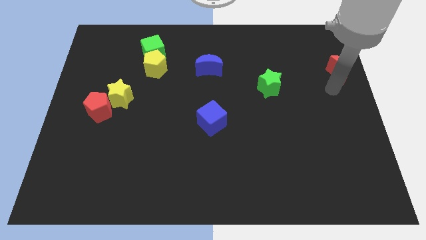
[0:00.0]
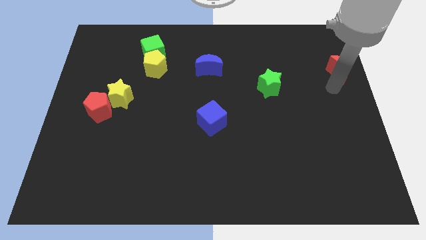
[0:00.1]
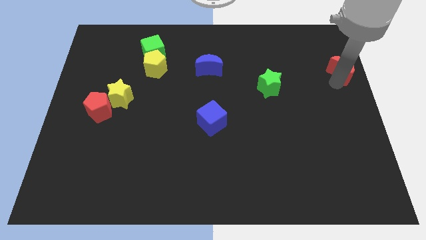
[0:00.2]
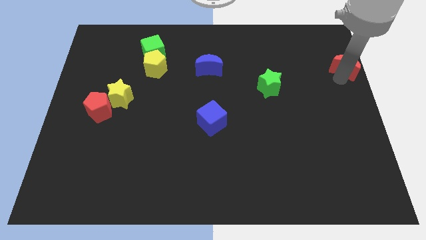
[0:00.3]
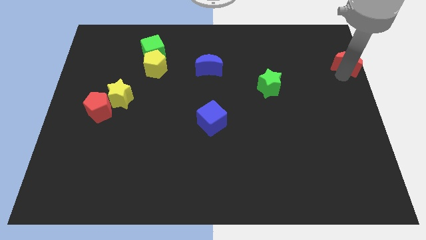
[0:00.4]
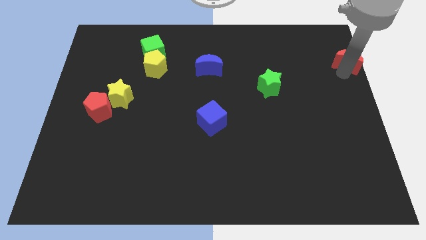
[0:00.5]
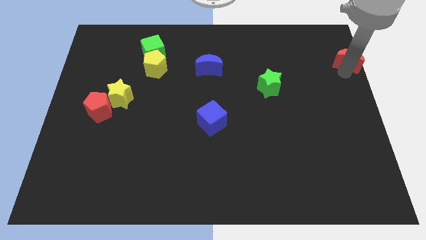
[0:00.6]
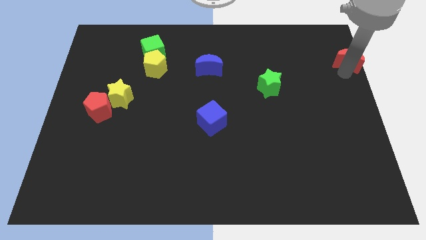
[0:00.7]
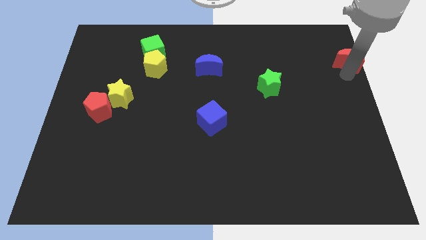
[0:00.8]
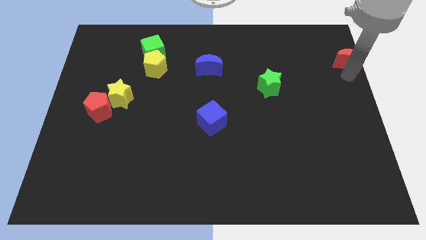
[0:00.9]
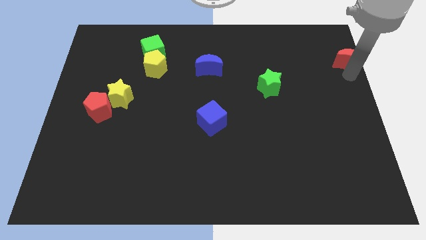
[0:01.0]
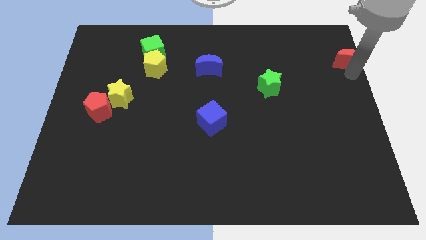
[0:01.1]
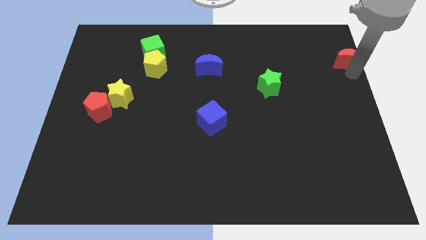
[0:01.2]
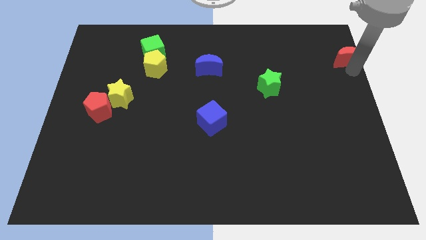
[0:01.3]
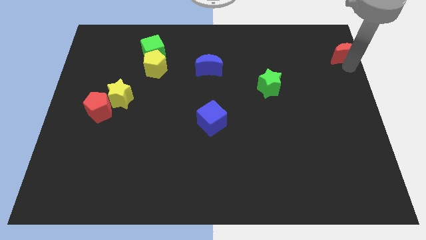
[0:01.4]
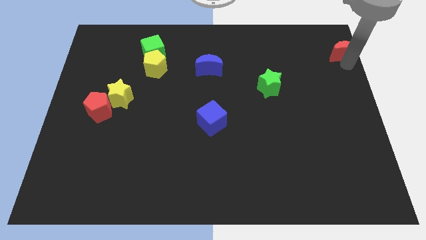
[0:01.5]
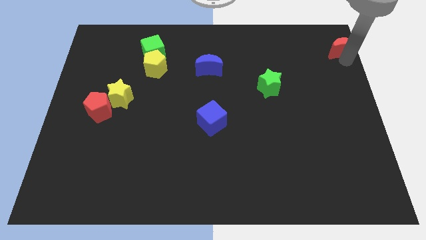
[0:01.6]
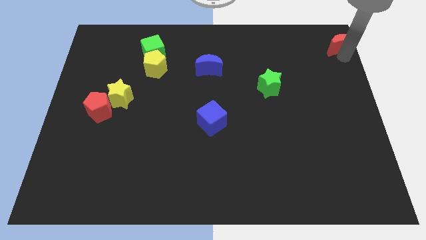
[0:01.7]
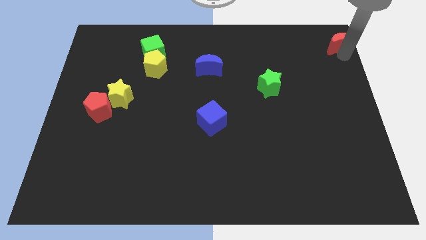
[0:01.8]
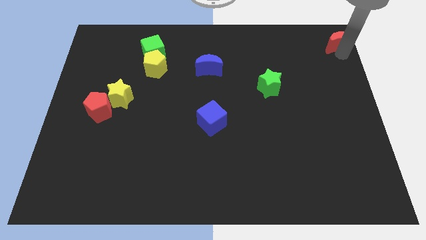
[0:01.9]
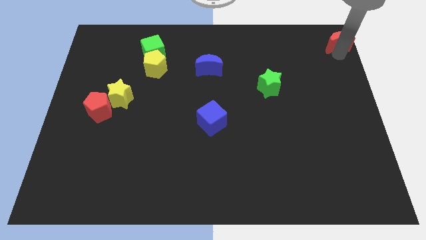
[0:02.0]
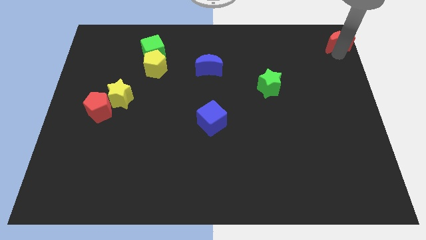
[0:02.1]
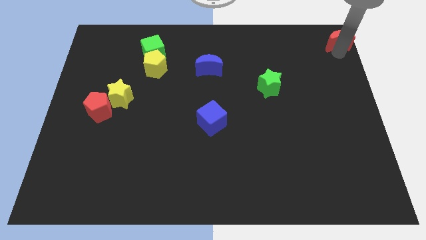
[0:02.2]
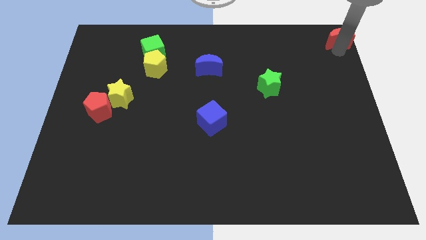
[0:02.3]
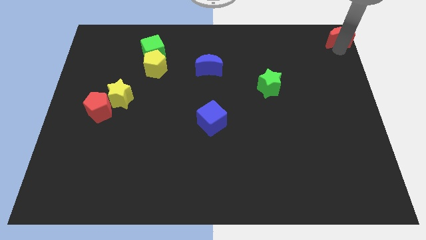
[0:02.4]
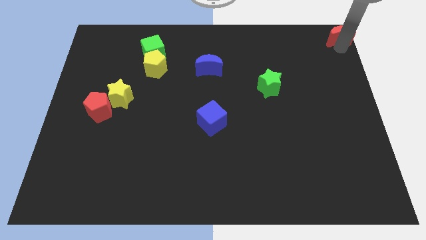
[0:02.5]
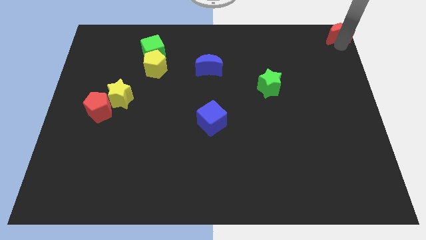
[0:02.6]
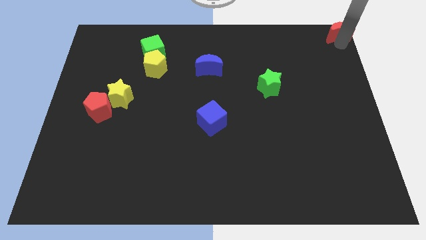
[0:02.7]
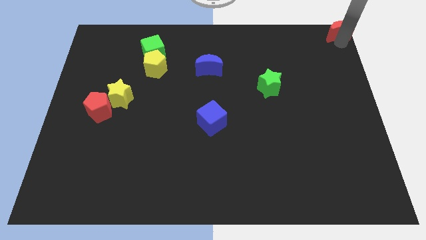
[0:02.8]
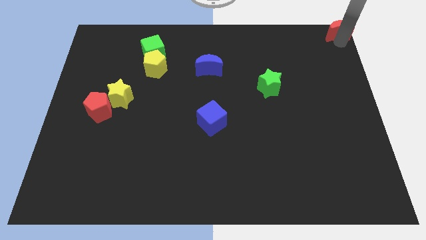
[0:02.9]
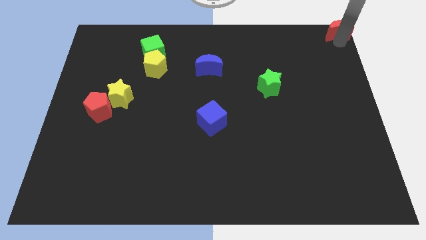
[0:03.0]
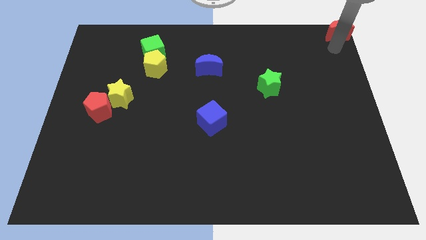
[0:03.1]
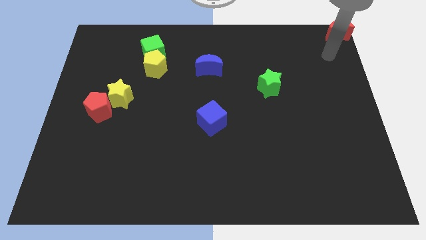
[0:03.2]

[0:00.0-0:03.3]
move the red moon towards top right side corner

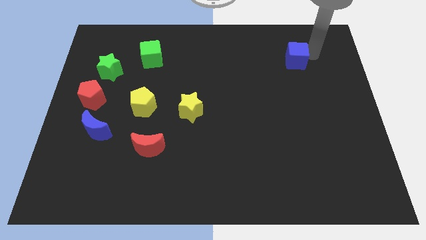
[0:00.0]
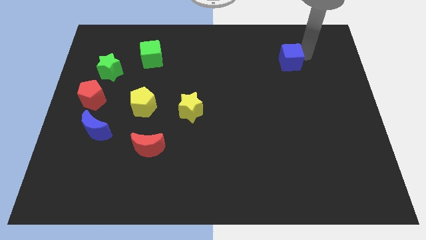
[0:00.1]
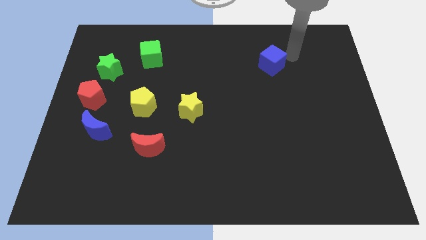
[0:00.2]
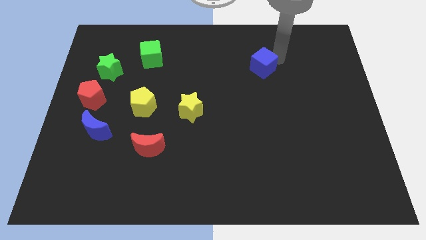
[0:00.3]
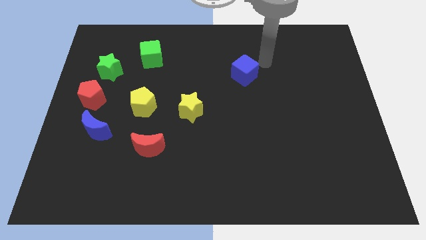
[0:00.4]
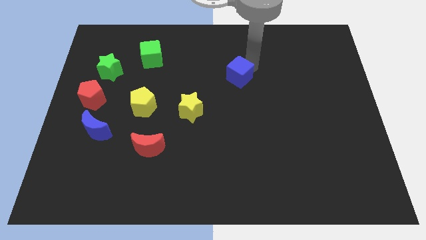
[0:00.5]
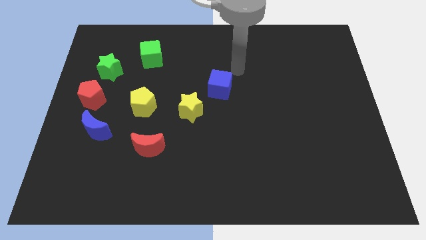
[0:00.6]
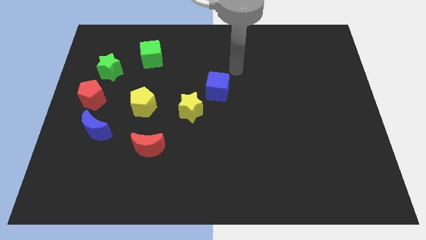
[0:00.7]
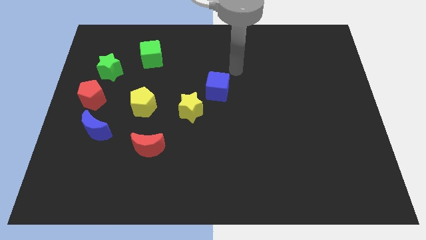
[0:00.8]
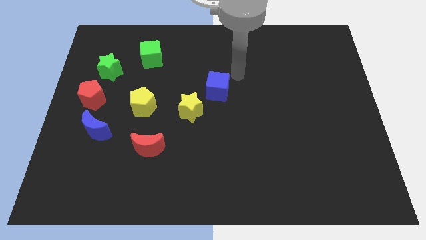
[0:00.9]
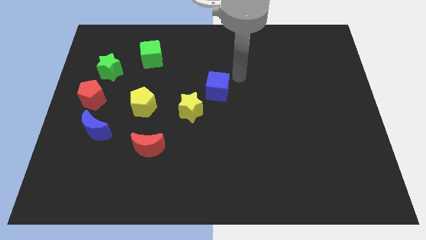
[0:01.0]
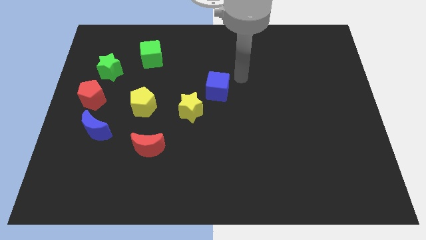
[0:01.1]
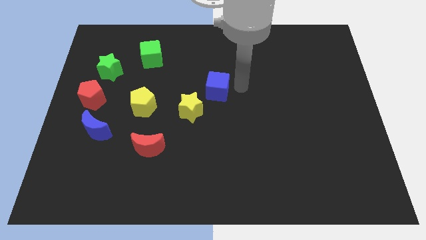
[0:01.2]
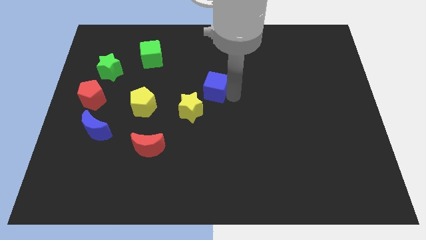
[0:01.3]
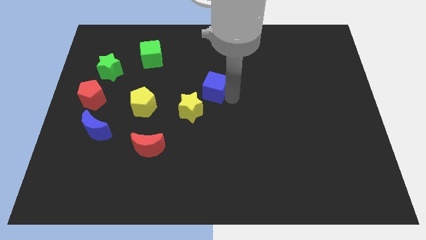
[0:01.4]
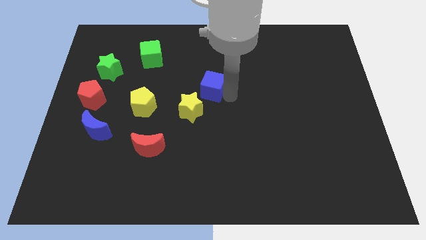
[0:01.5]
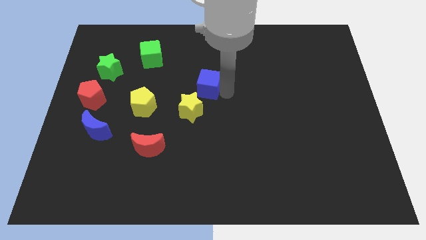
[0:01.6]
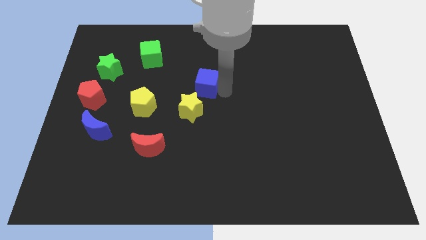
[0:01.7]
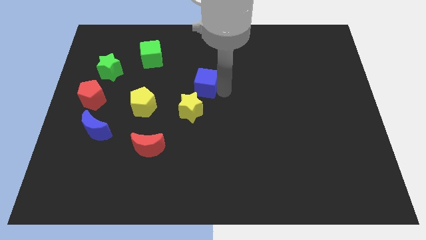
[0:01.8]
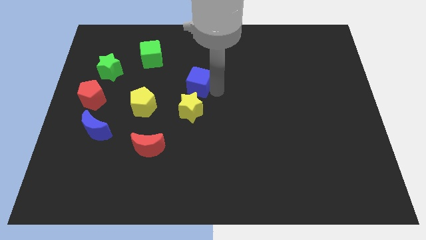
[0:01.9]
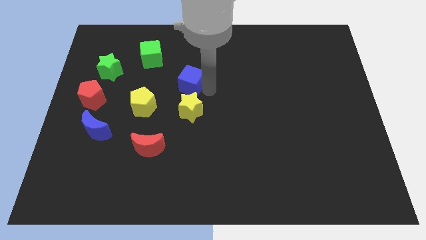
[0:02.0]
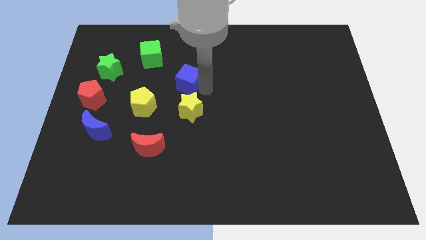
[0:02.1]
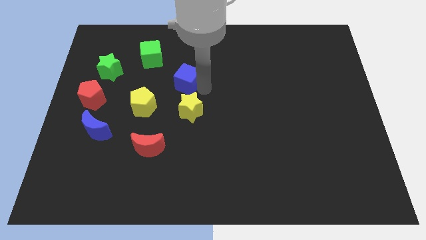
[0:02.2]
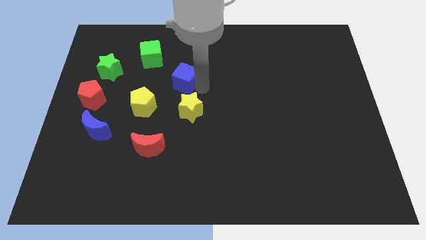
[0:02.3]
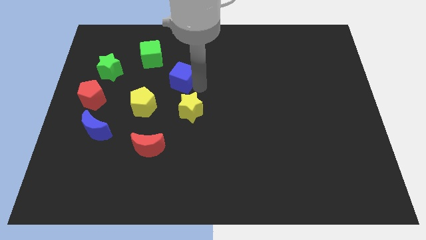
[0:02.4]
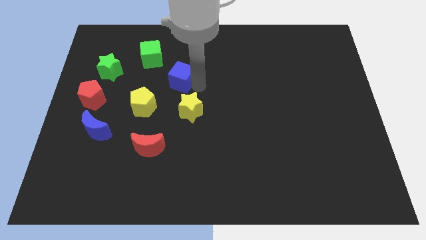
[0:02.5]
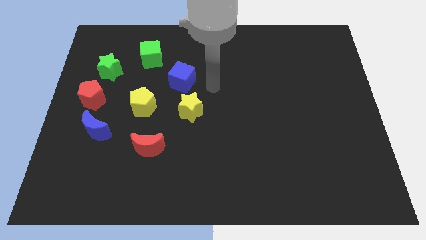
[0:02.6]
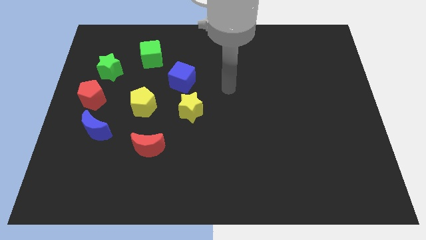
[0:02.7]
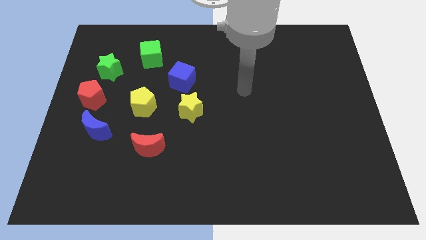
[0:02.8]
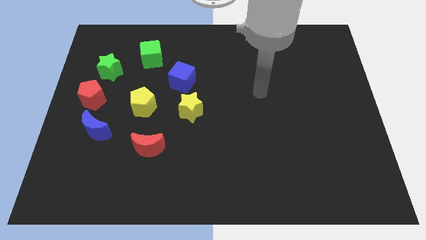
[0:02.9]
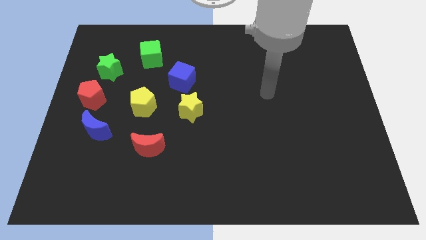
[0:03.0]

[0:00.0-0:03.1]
push the blue cube in between green cube and yellow star

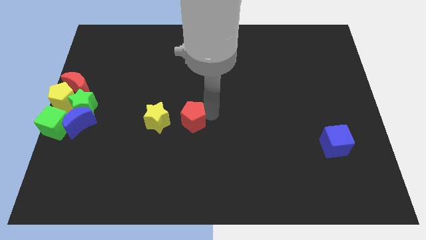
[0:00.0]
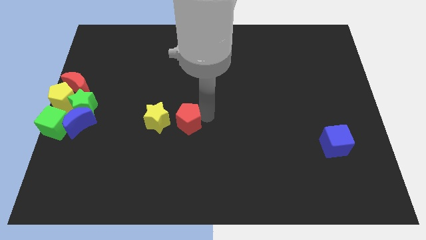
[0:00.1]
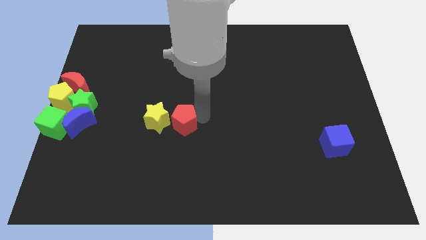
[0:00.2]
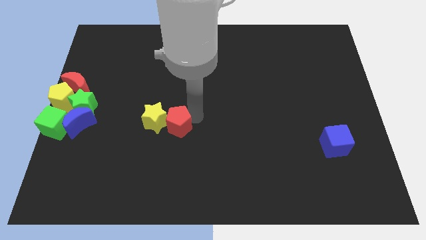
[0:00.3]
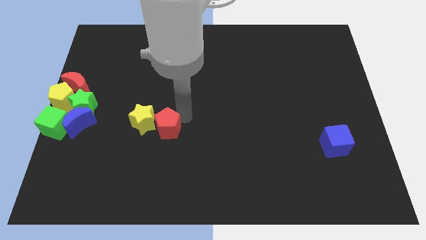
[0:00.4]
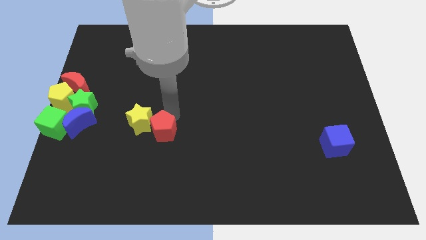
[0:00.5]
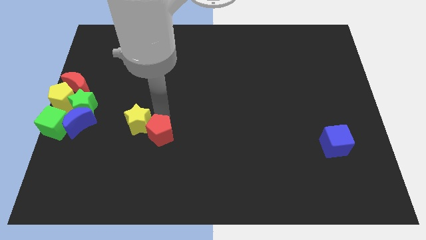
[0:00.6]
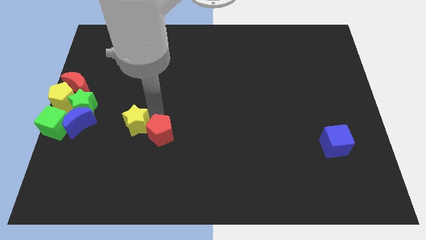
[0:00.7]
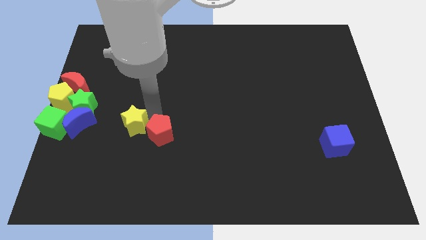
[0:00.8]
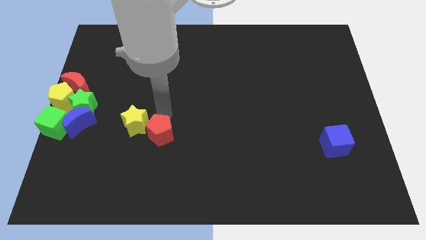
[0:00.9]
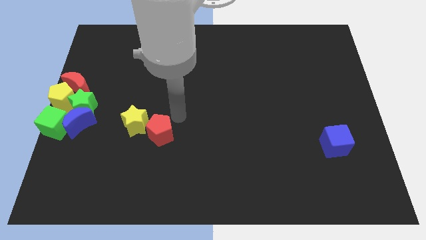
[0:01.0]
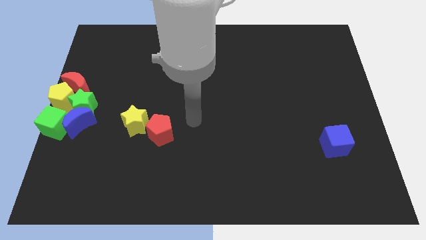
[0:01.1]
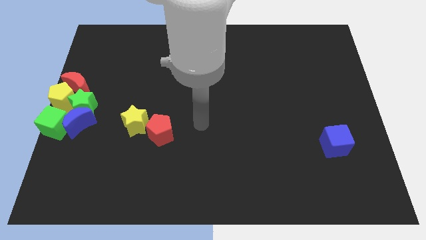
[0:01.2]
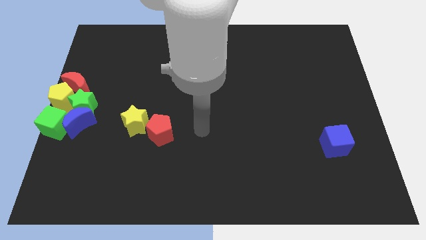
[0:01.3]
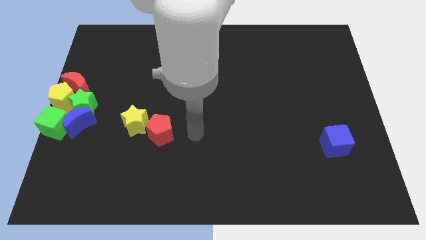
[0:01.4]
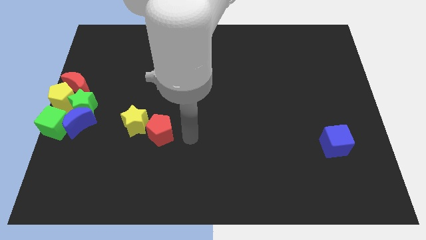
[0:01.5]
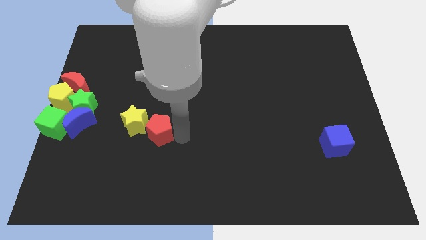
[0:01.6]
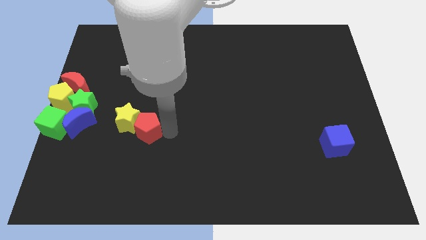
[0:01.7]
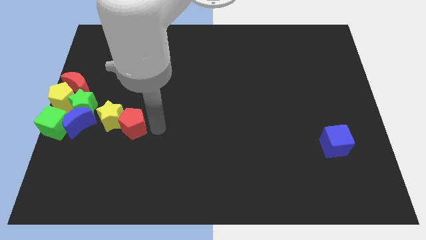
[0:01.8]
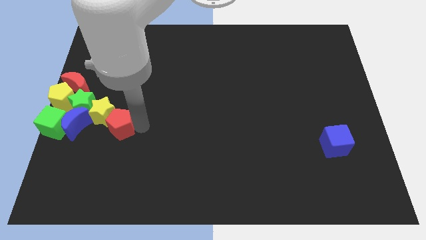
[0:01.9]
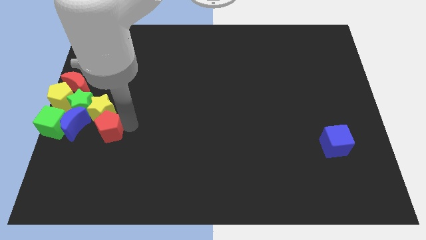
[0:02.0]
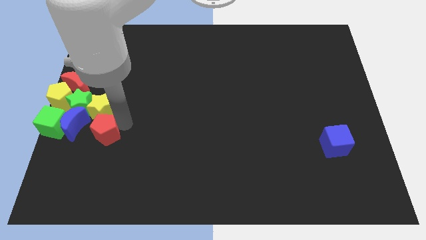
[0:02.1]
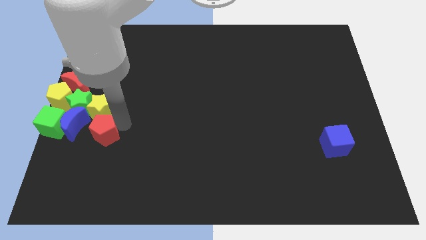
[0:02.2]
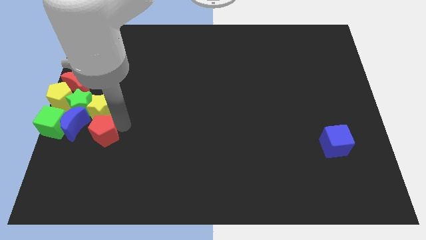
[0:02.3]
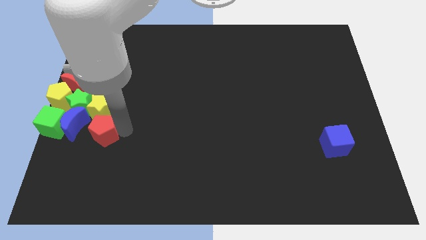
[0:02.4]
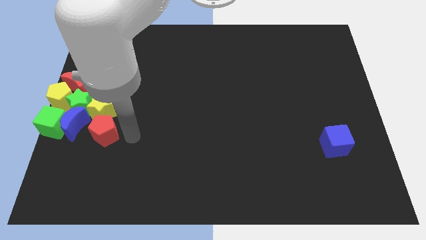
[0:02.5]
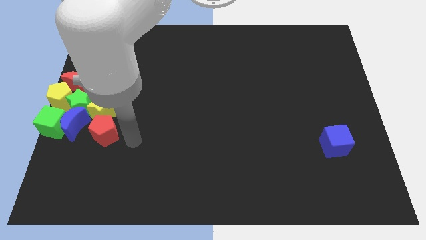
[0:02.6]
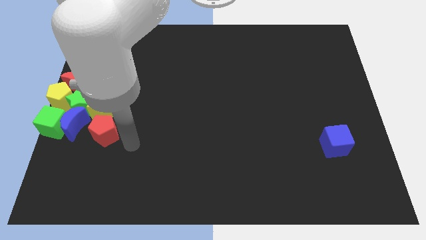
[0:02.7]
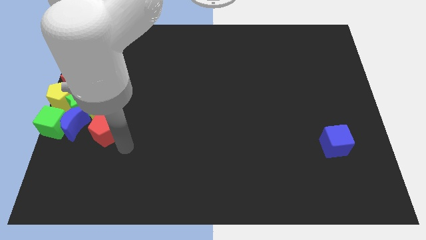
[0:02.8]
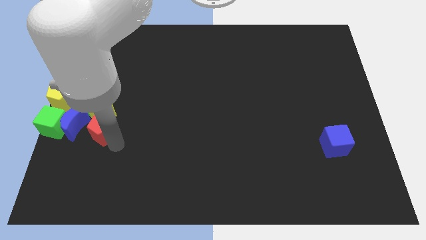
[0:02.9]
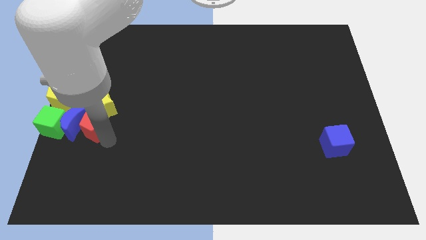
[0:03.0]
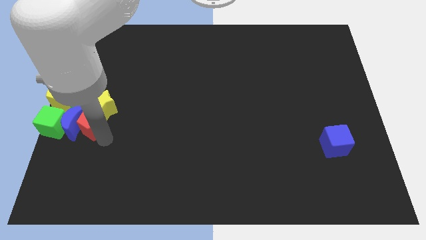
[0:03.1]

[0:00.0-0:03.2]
push the red pentagon into the yellow star
